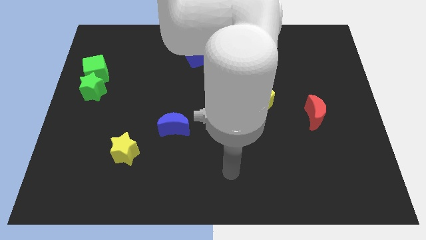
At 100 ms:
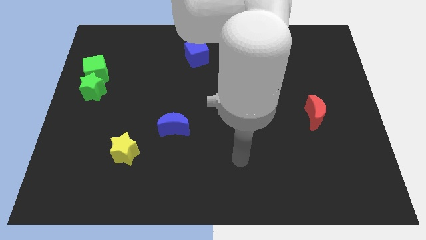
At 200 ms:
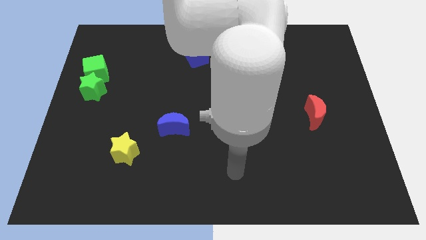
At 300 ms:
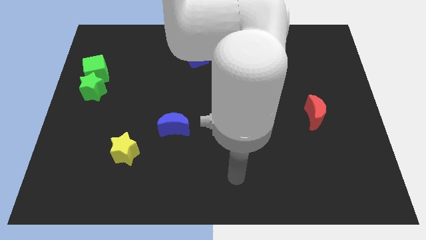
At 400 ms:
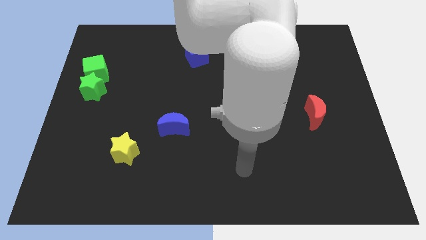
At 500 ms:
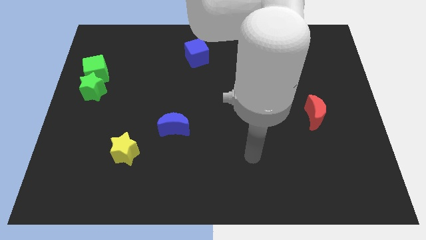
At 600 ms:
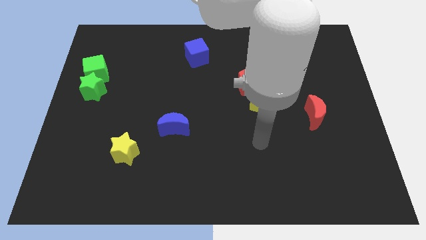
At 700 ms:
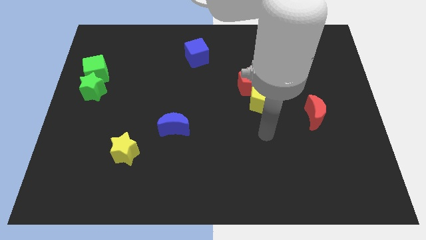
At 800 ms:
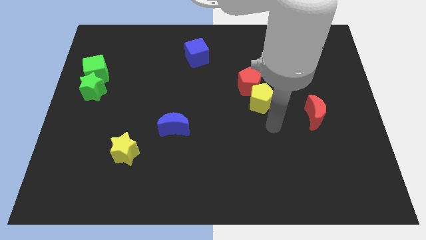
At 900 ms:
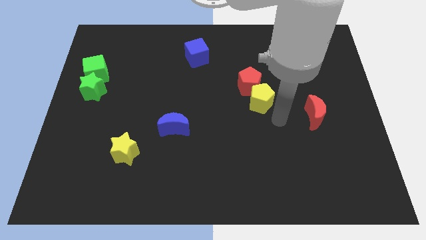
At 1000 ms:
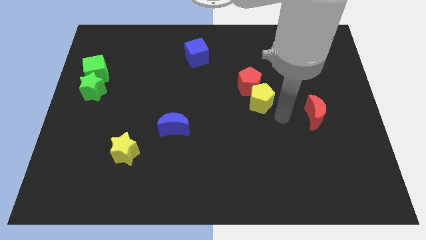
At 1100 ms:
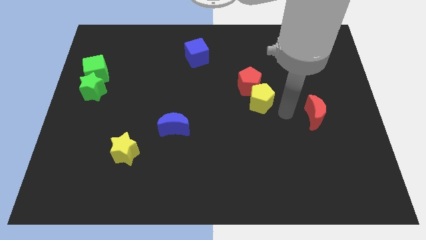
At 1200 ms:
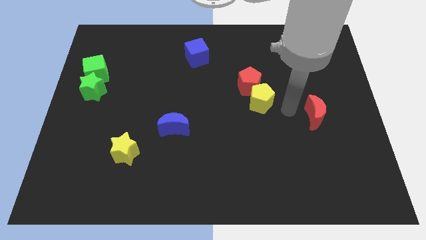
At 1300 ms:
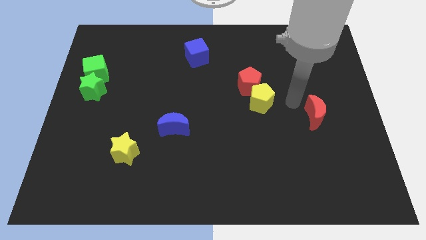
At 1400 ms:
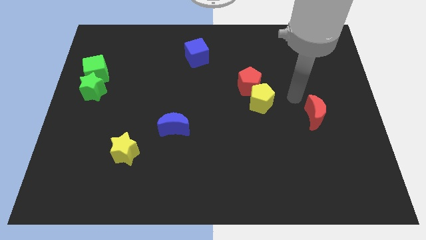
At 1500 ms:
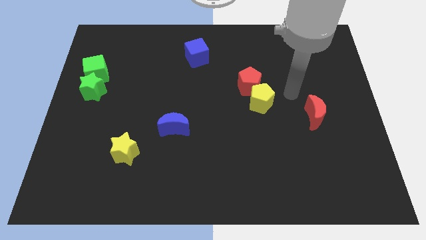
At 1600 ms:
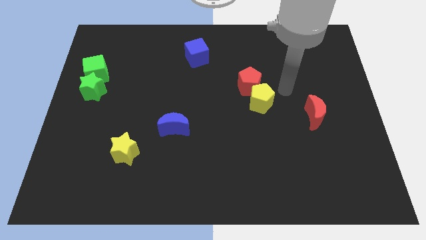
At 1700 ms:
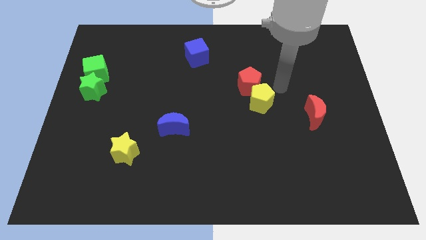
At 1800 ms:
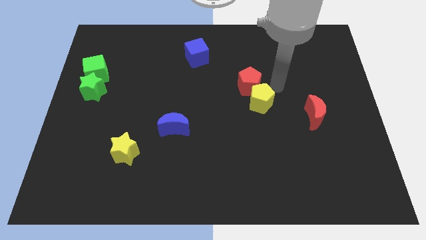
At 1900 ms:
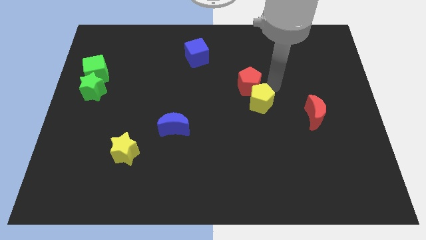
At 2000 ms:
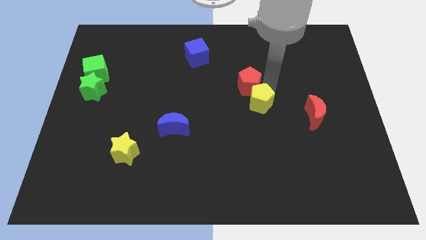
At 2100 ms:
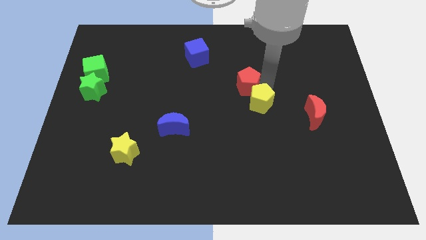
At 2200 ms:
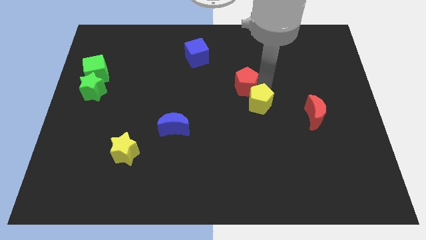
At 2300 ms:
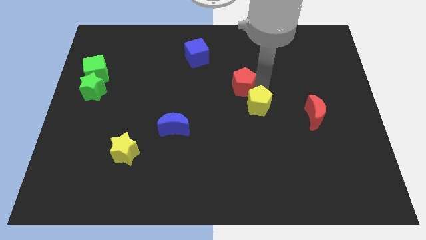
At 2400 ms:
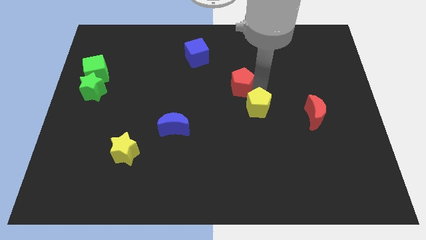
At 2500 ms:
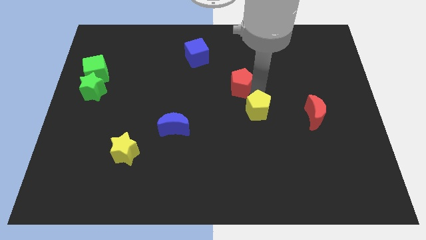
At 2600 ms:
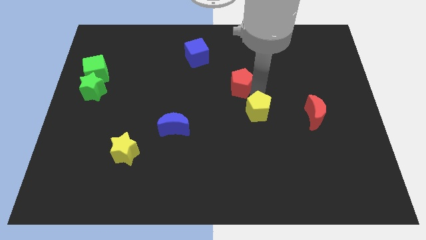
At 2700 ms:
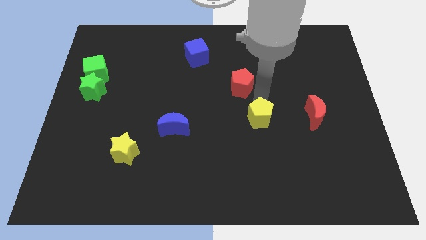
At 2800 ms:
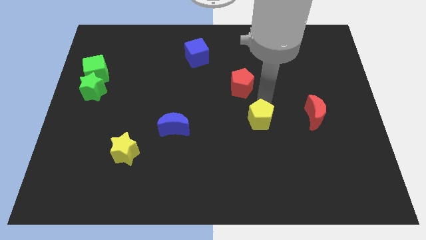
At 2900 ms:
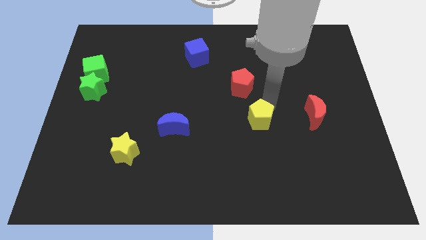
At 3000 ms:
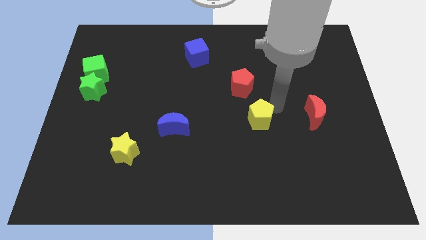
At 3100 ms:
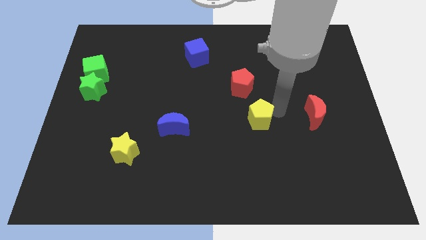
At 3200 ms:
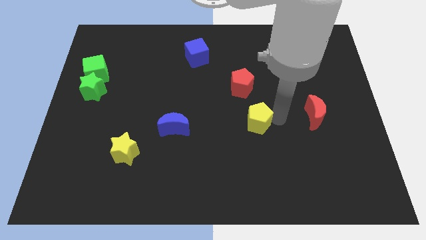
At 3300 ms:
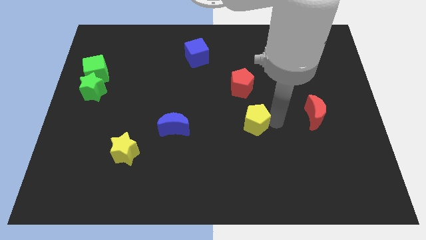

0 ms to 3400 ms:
push the yellow pentagon to the left of the red crescent

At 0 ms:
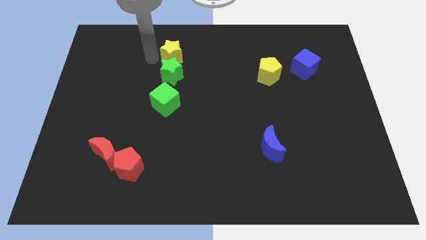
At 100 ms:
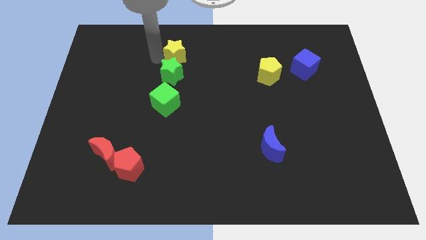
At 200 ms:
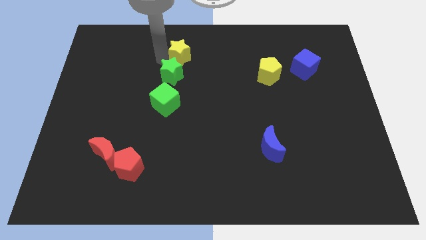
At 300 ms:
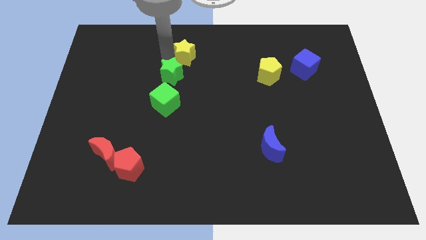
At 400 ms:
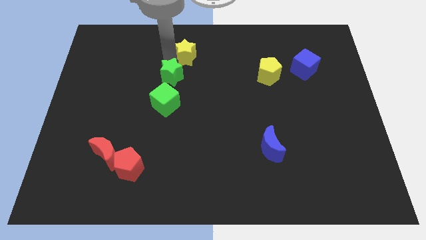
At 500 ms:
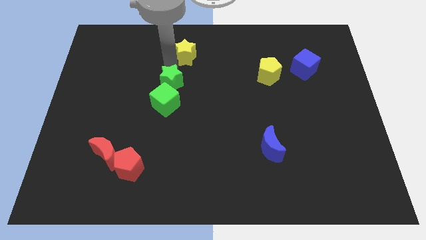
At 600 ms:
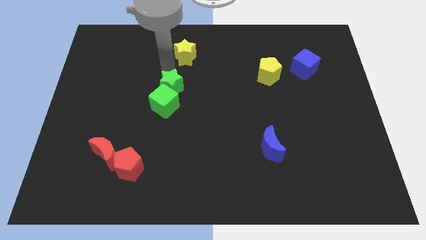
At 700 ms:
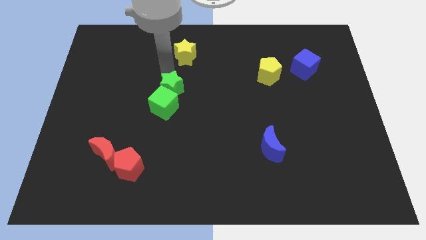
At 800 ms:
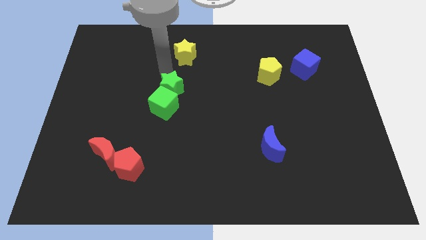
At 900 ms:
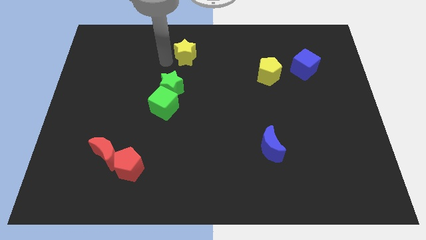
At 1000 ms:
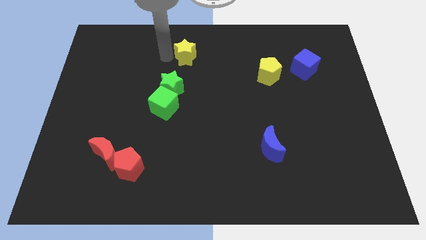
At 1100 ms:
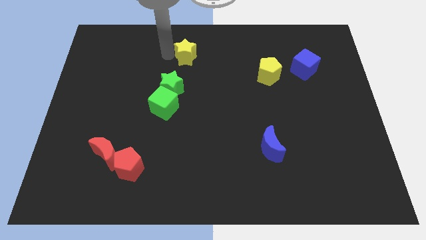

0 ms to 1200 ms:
push the green star into the green cube

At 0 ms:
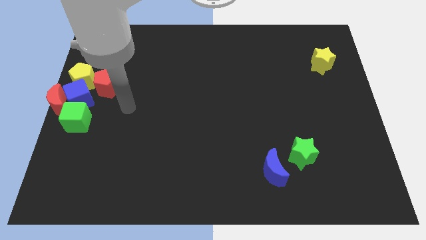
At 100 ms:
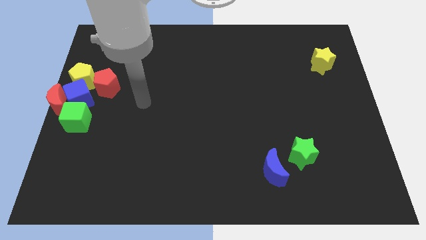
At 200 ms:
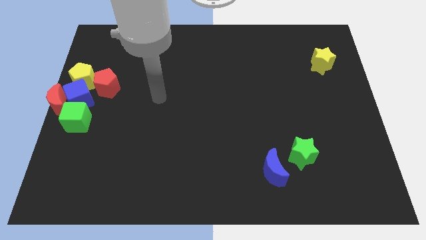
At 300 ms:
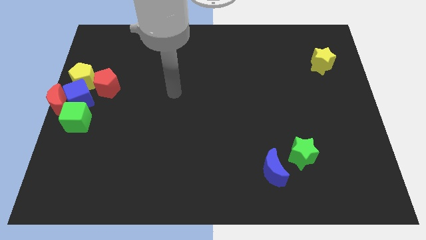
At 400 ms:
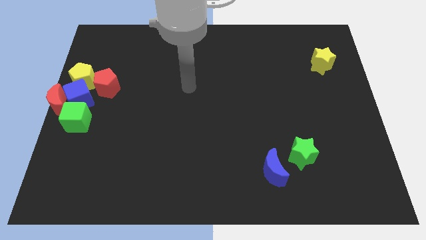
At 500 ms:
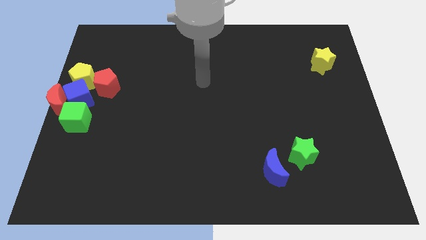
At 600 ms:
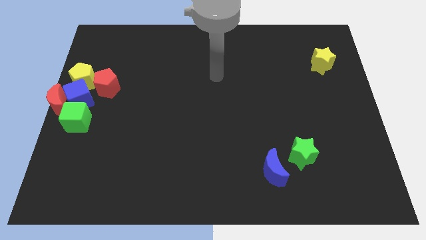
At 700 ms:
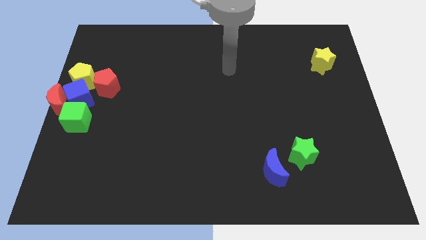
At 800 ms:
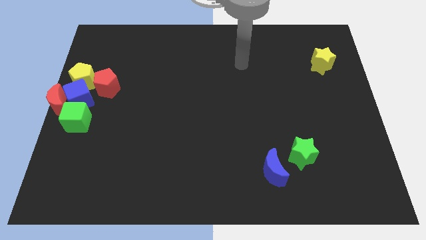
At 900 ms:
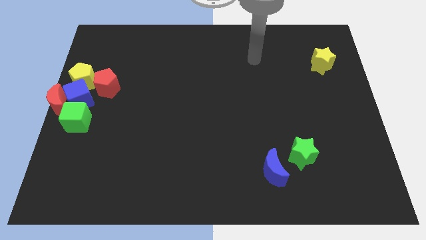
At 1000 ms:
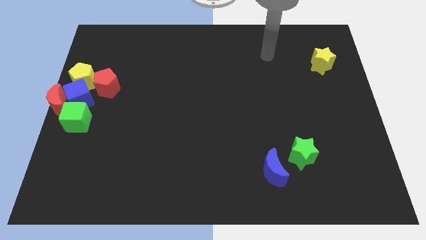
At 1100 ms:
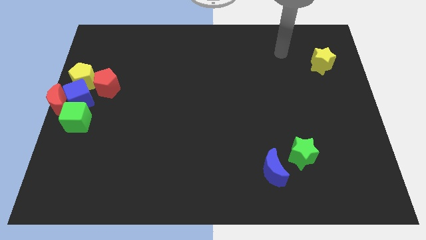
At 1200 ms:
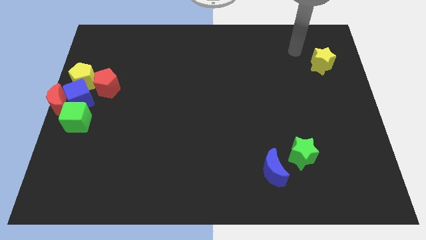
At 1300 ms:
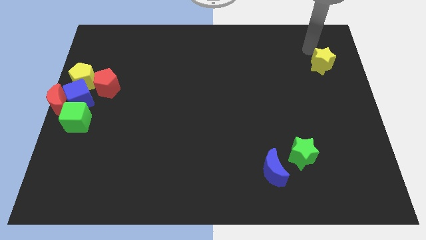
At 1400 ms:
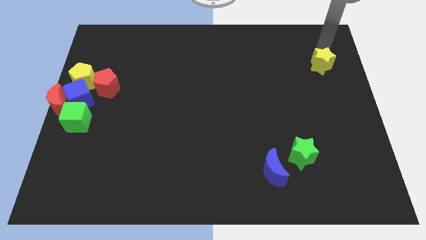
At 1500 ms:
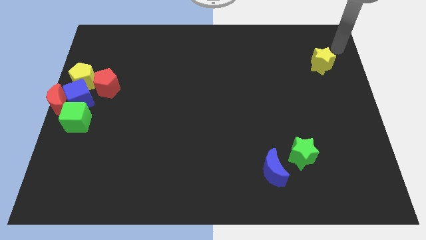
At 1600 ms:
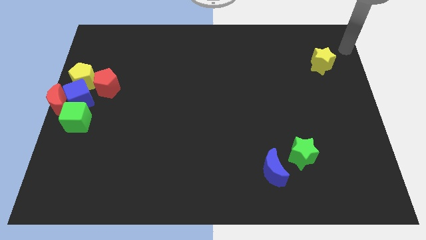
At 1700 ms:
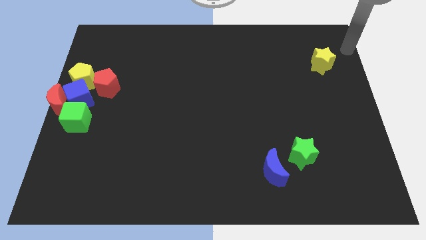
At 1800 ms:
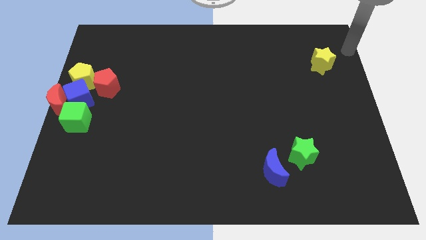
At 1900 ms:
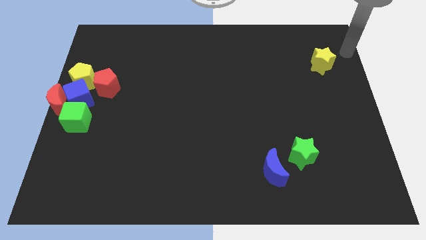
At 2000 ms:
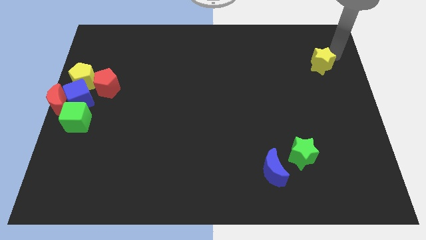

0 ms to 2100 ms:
move the arm above to the yellow star

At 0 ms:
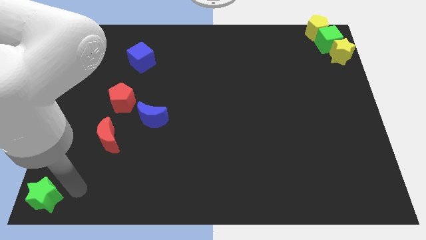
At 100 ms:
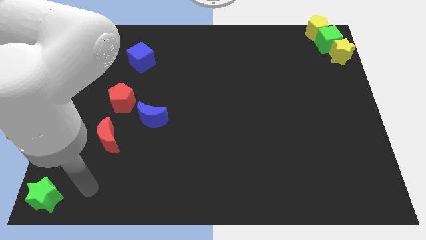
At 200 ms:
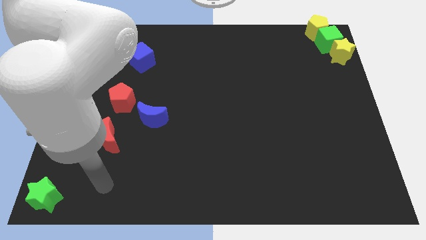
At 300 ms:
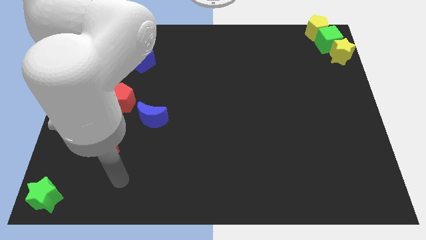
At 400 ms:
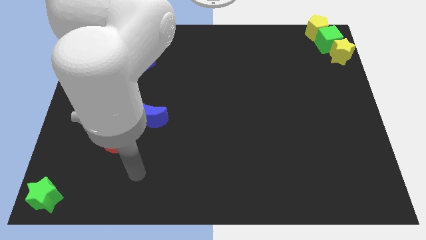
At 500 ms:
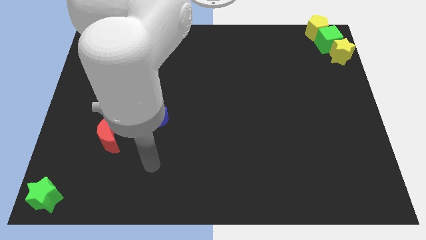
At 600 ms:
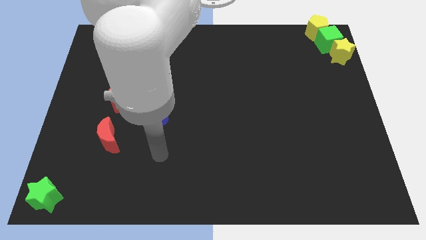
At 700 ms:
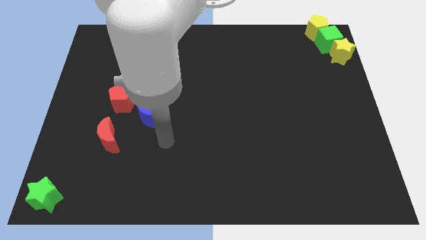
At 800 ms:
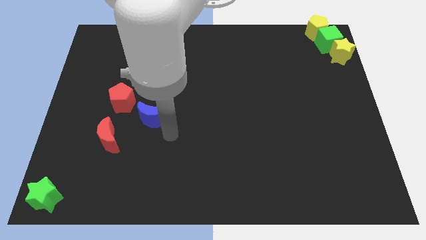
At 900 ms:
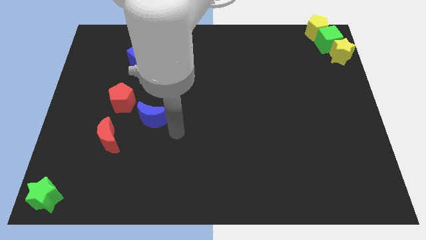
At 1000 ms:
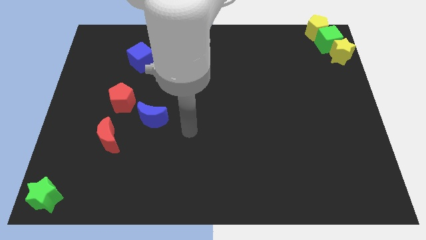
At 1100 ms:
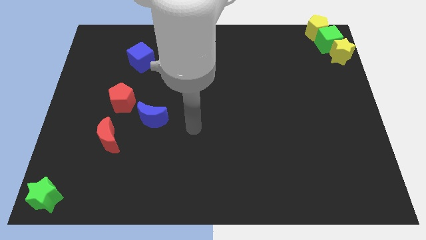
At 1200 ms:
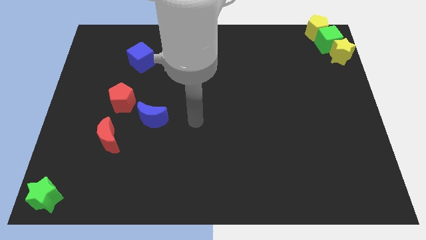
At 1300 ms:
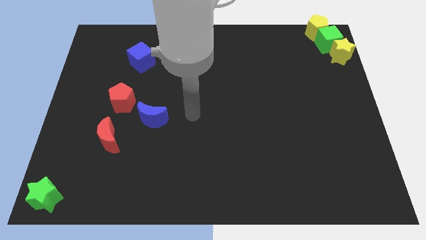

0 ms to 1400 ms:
move the arm away from the green star

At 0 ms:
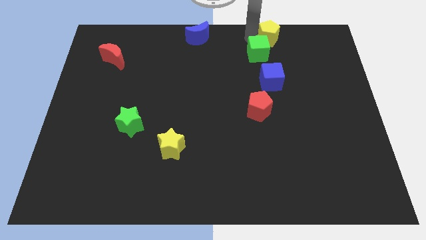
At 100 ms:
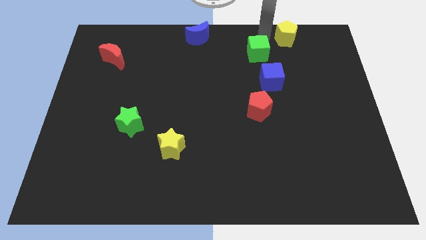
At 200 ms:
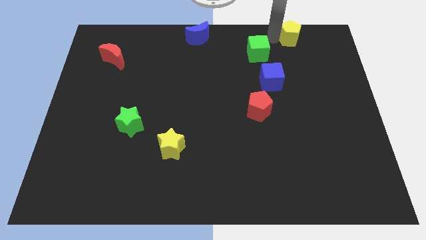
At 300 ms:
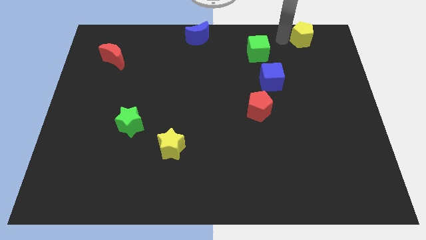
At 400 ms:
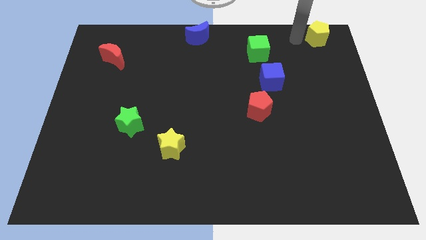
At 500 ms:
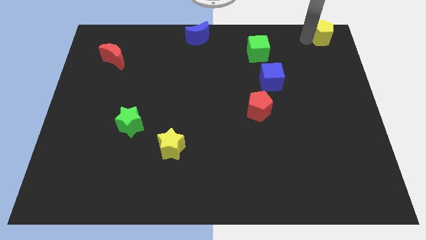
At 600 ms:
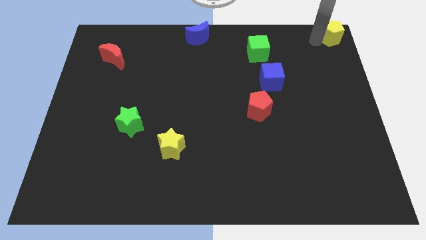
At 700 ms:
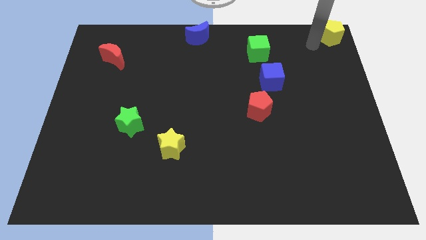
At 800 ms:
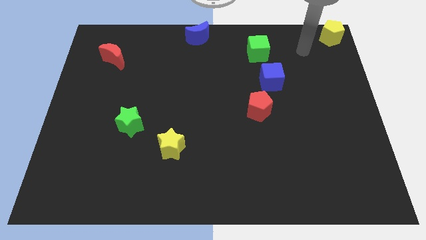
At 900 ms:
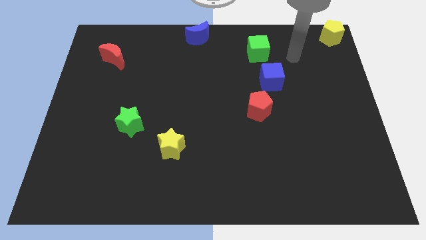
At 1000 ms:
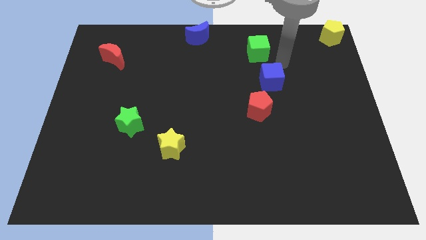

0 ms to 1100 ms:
move the yellow pentagon to the top right corner
